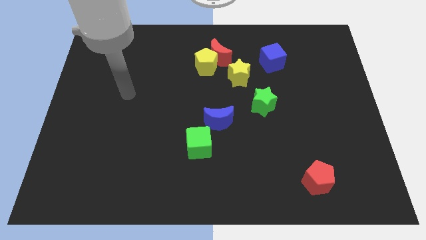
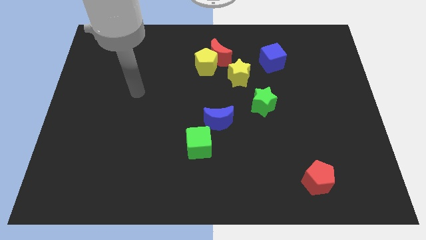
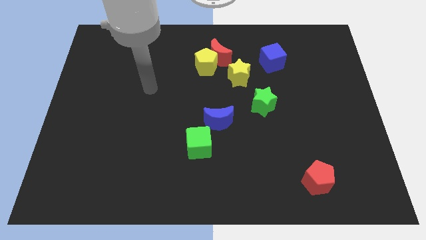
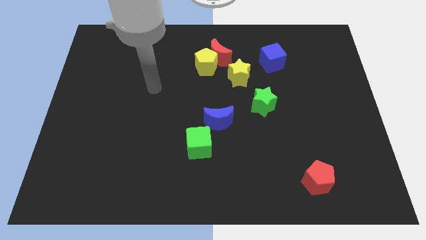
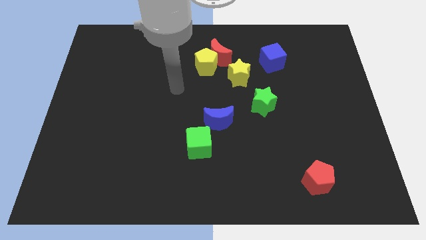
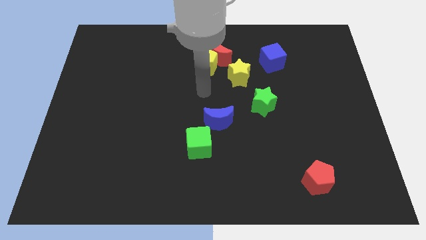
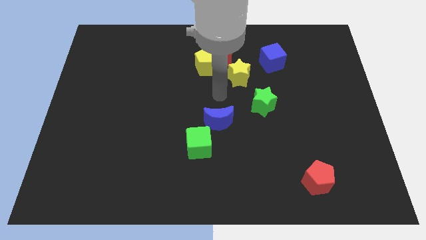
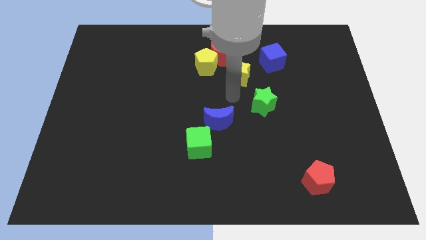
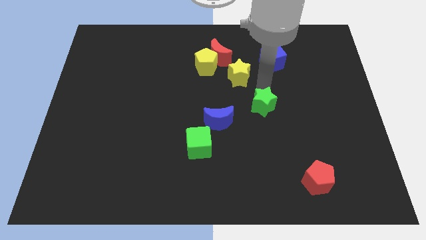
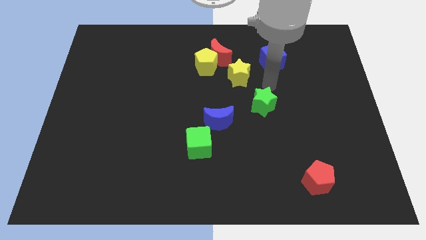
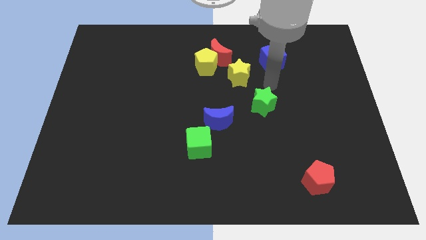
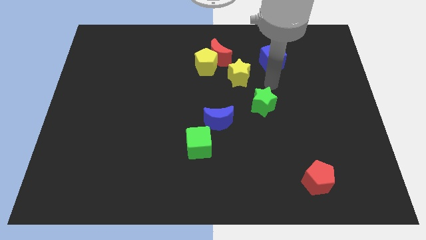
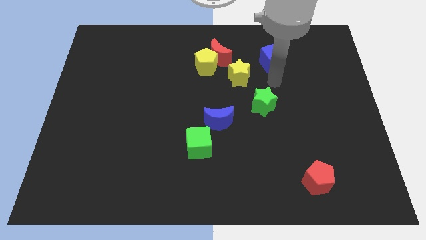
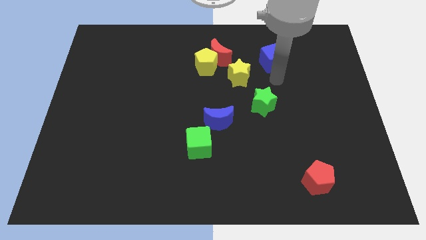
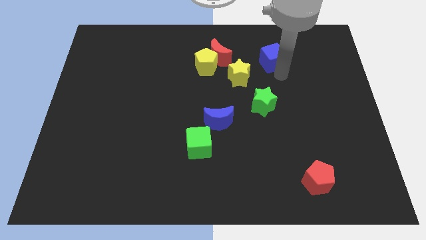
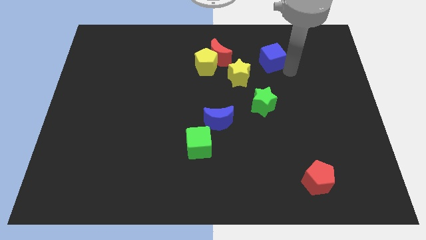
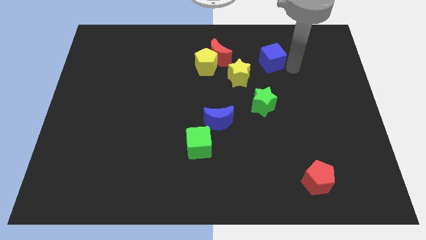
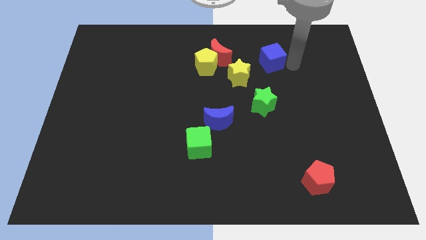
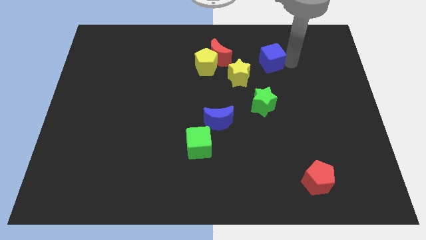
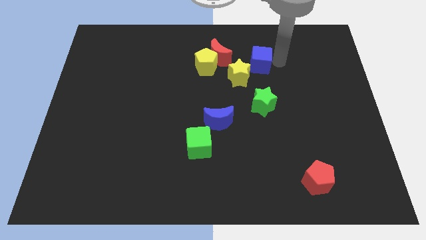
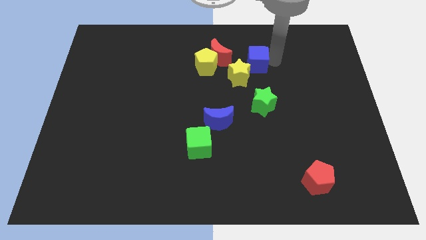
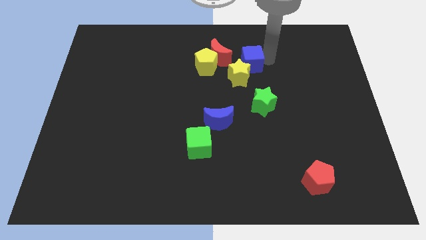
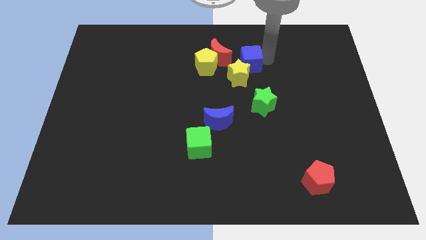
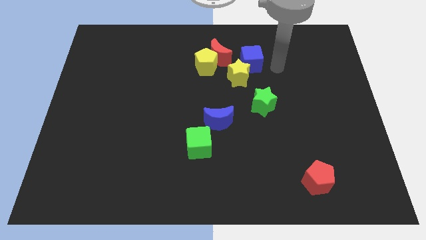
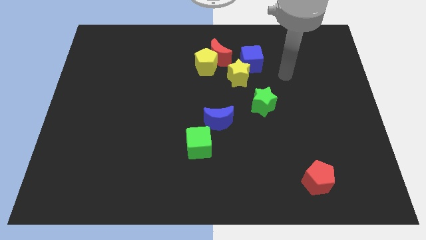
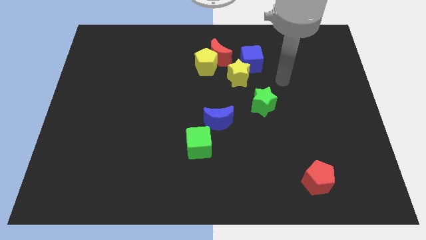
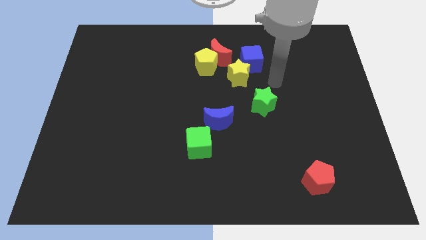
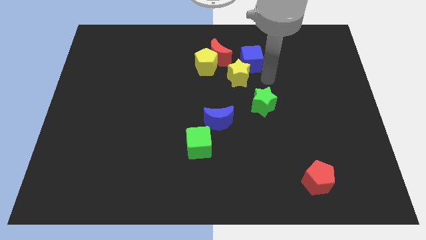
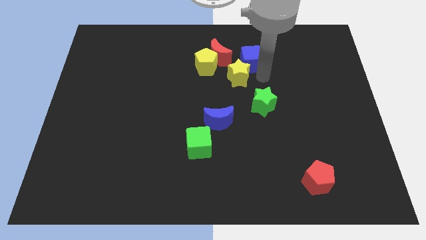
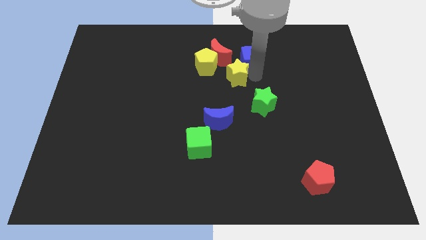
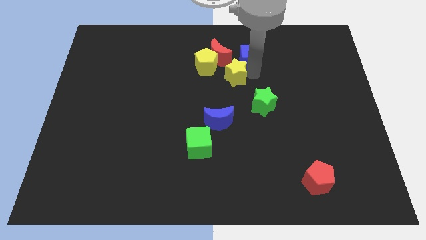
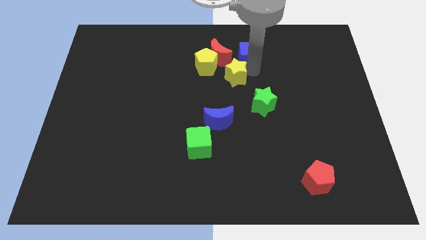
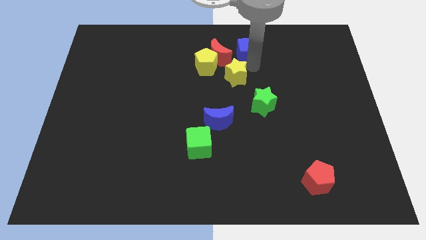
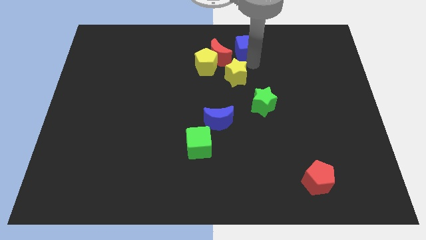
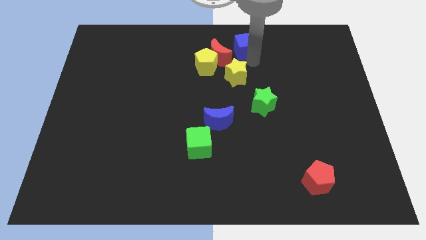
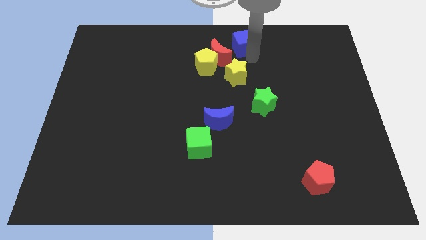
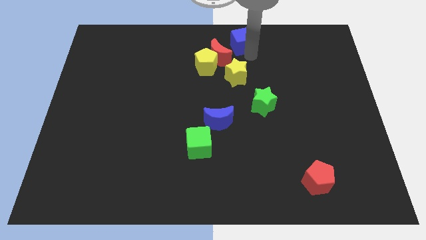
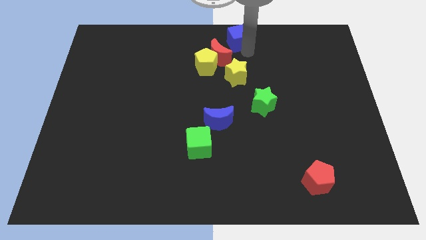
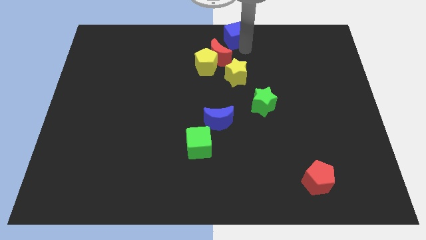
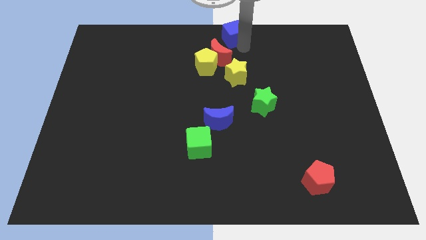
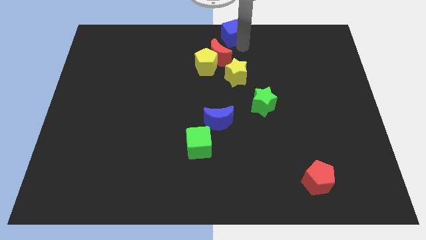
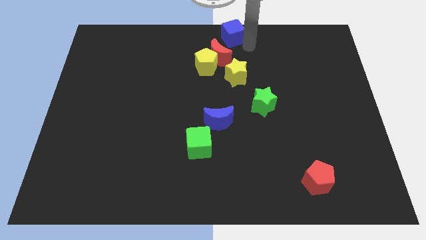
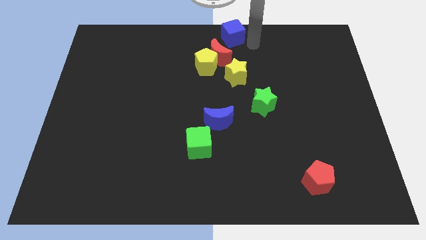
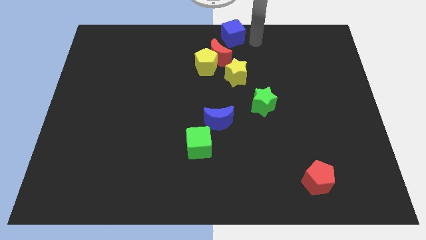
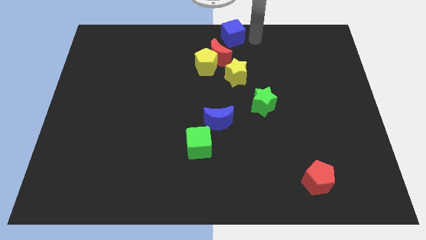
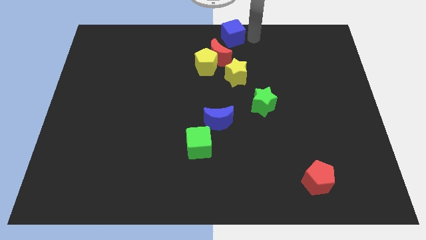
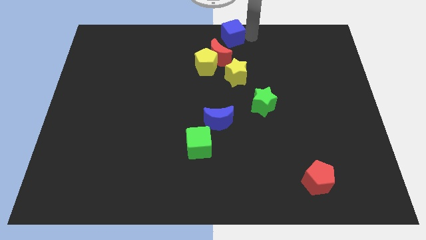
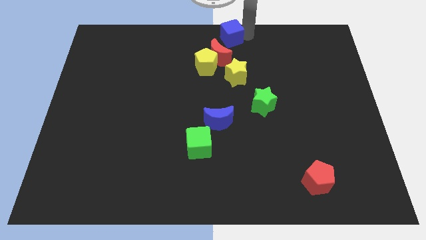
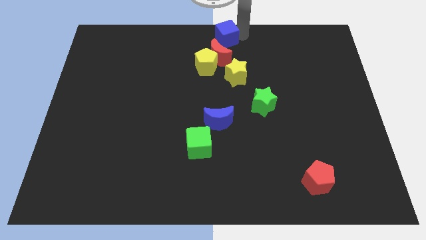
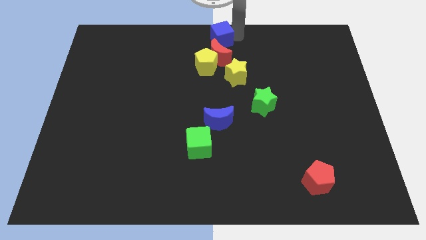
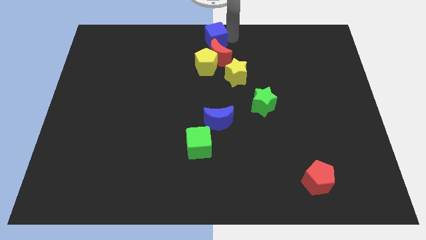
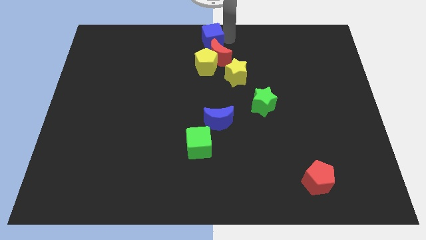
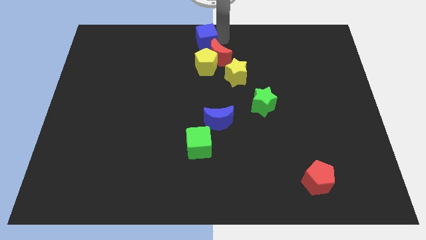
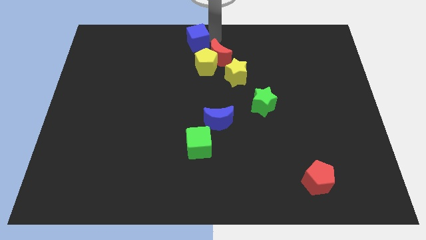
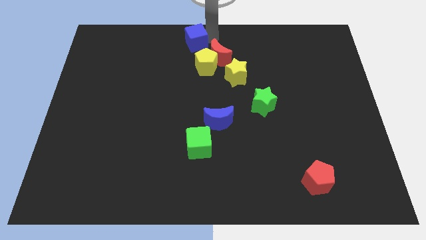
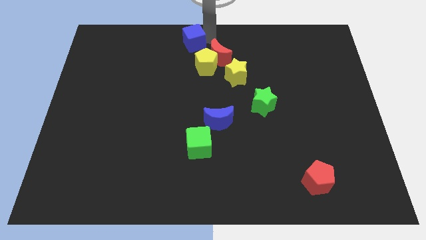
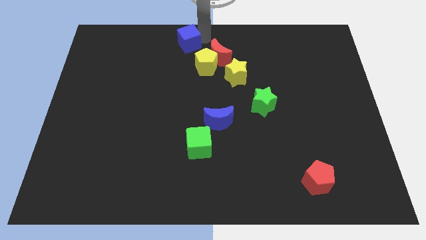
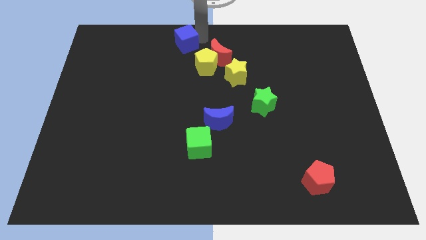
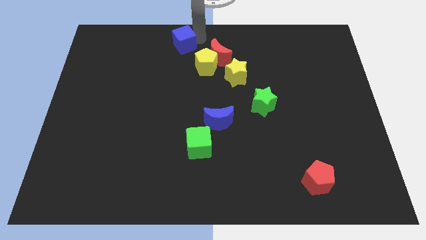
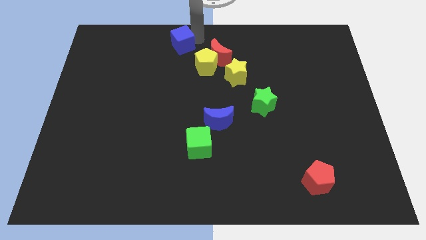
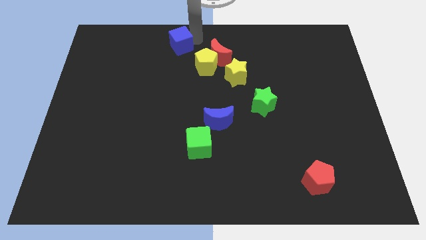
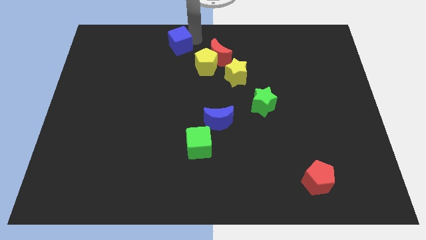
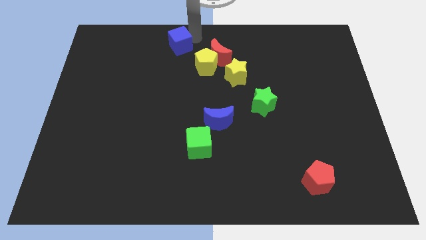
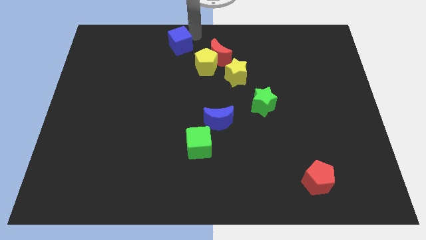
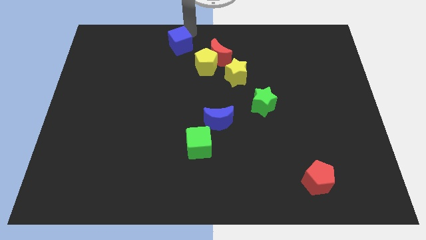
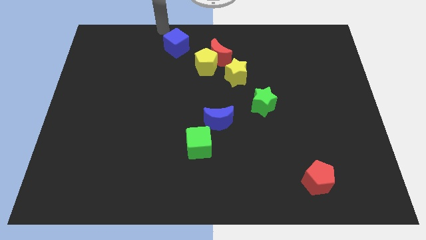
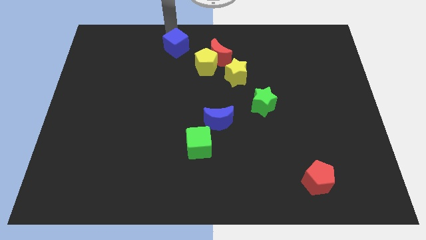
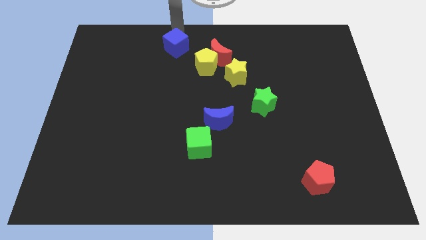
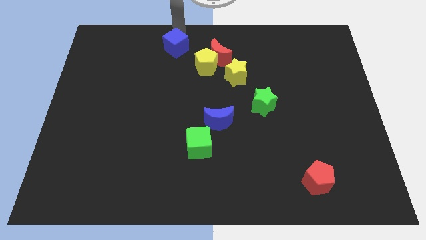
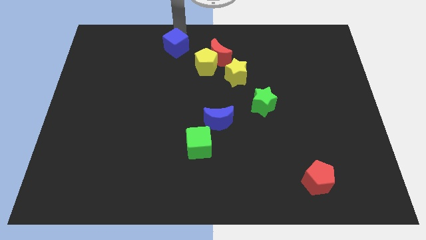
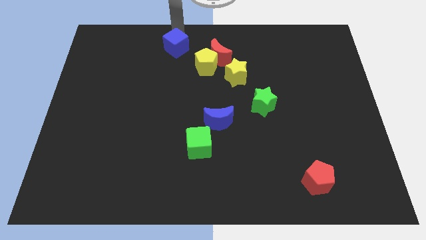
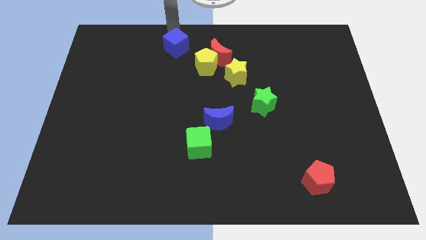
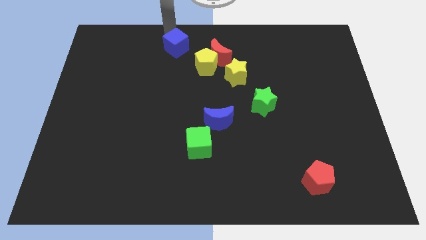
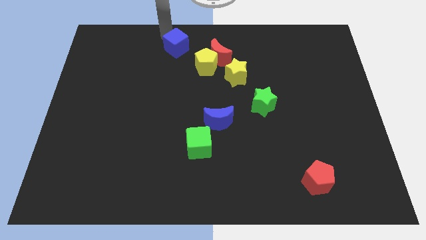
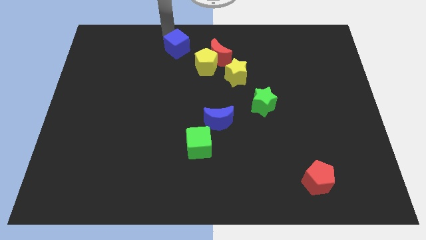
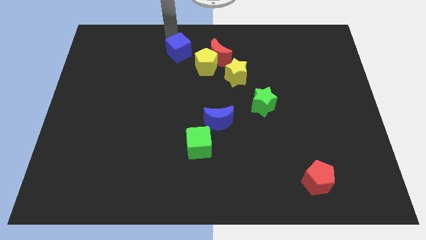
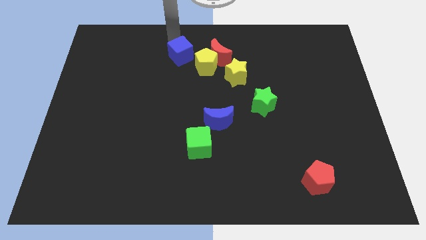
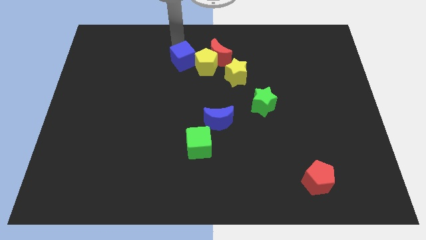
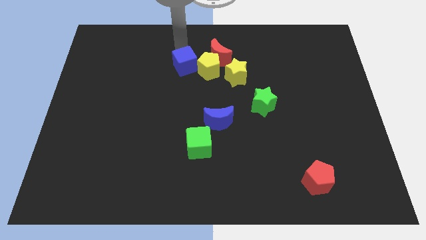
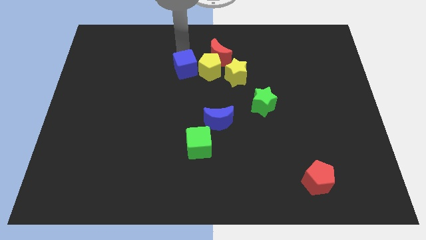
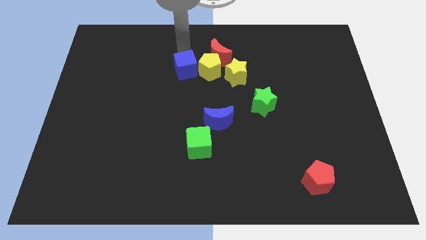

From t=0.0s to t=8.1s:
push the blue cube close to the yellow pentagon

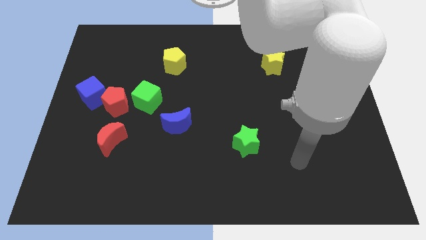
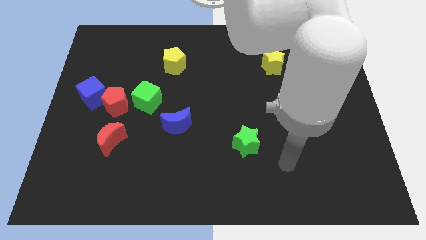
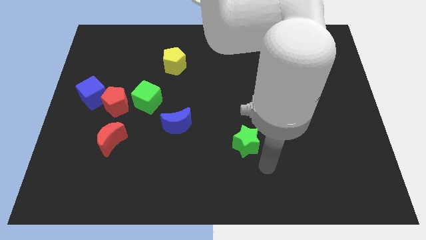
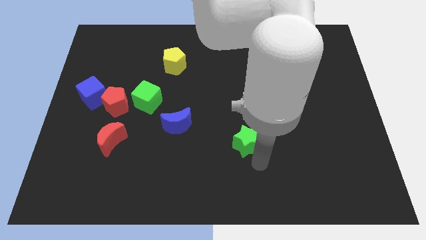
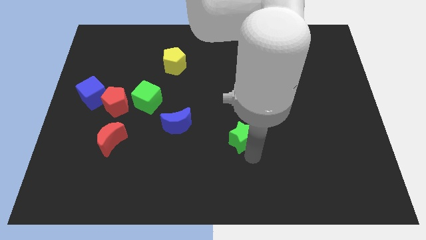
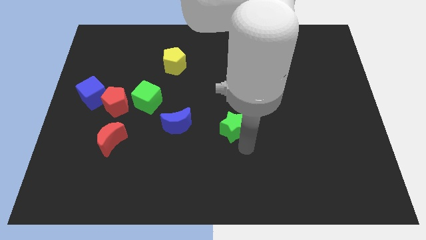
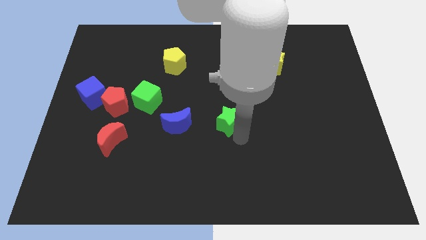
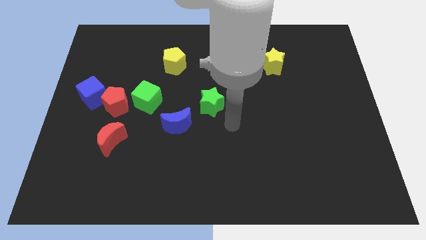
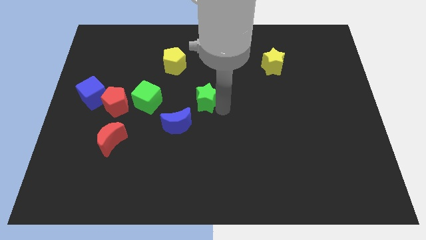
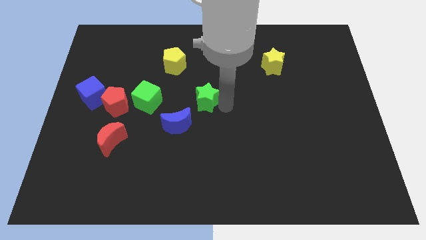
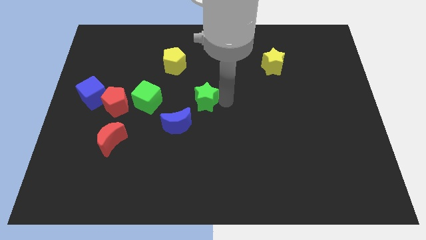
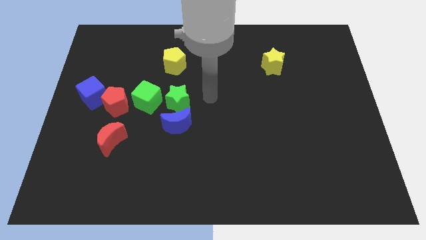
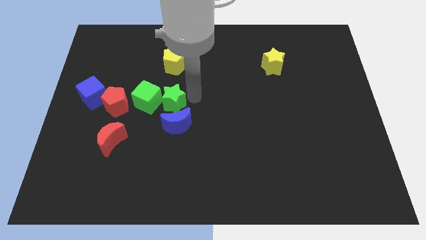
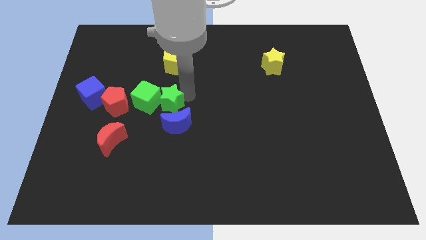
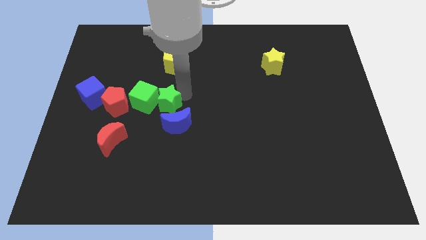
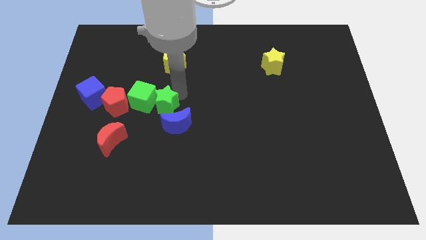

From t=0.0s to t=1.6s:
move the green star close to the green cube
